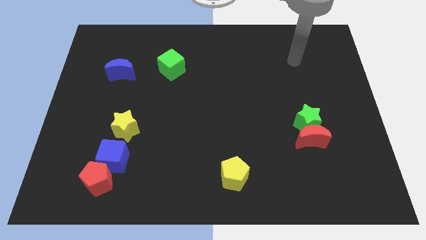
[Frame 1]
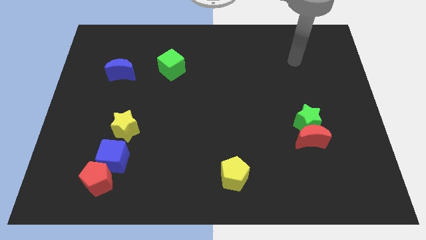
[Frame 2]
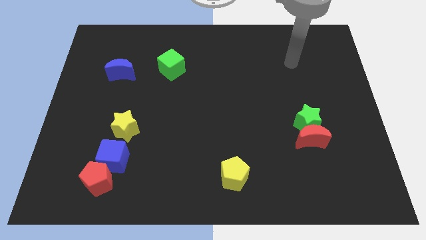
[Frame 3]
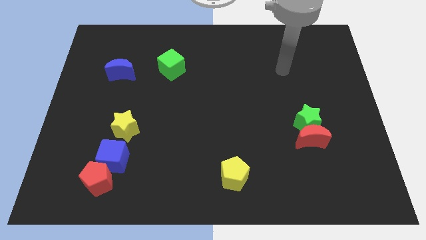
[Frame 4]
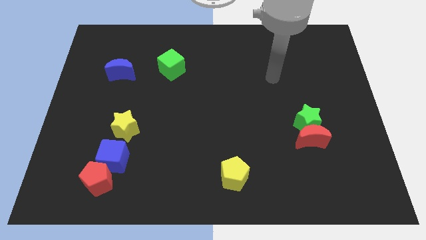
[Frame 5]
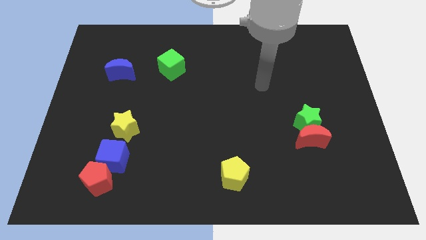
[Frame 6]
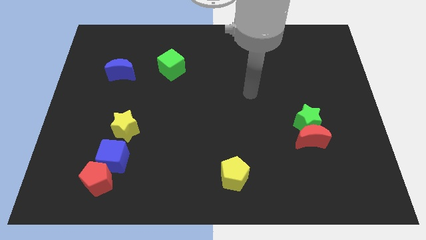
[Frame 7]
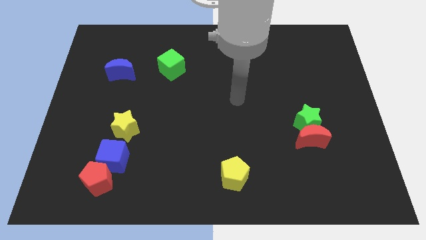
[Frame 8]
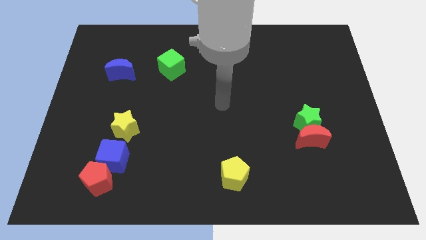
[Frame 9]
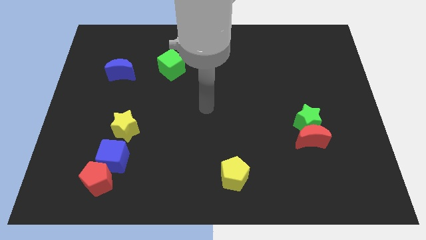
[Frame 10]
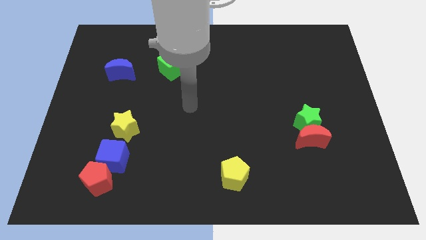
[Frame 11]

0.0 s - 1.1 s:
point your arm at the center of the board

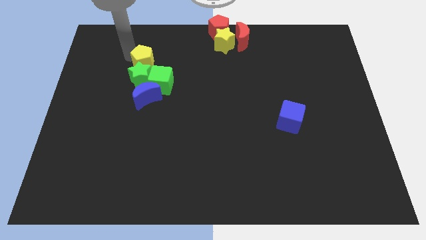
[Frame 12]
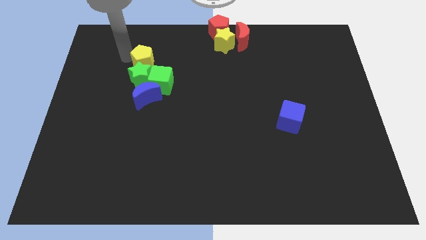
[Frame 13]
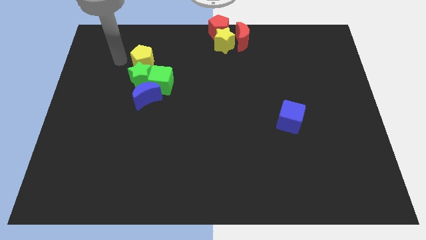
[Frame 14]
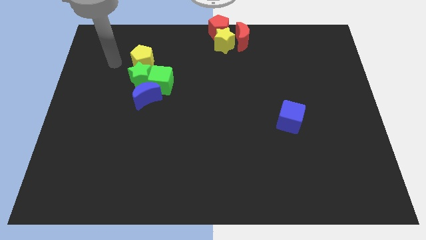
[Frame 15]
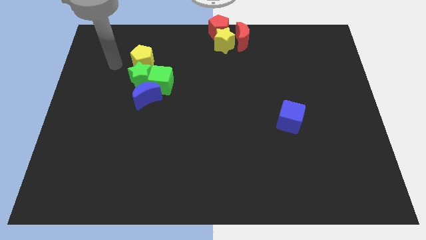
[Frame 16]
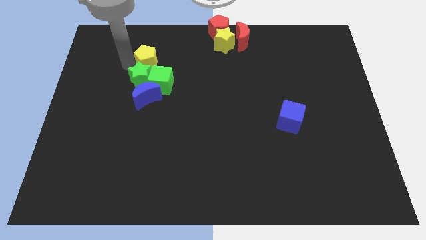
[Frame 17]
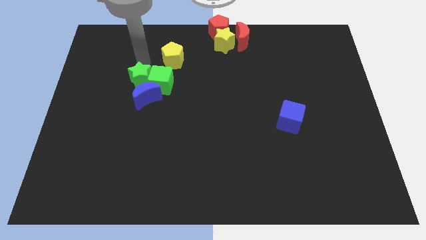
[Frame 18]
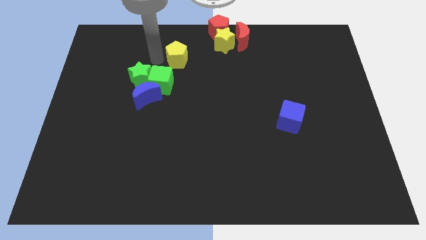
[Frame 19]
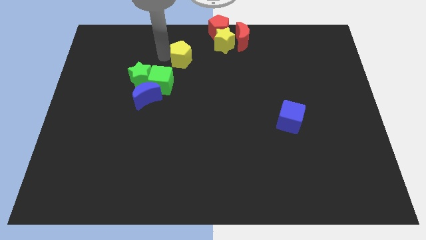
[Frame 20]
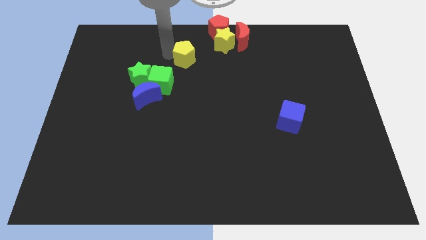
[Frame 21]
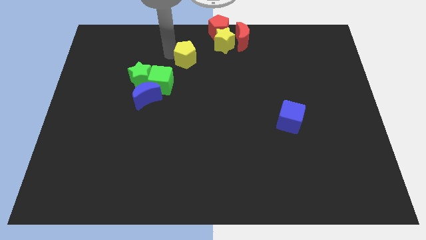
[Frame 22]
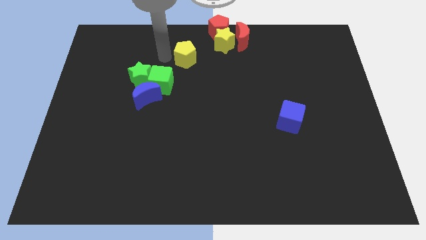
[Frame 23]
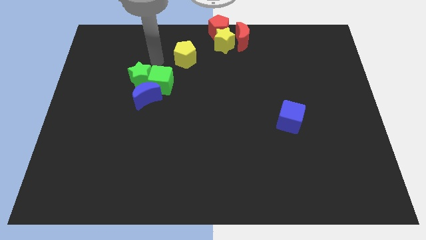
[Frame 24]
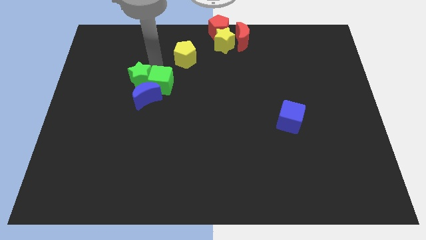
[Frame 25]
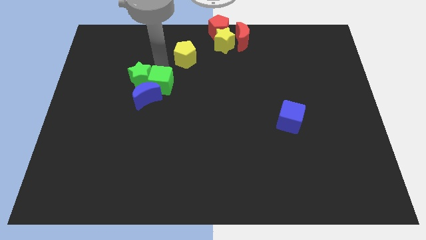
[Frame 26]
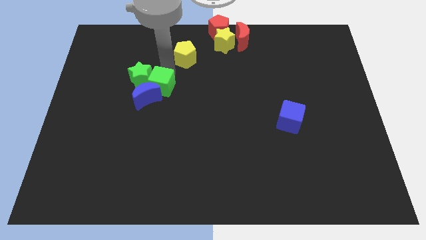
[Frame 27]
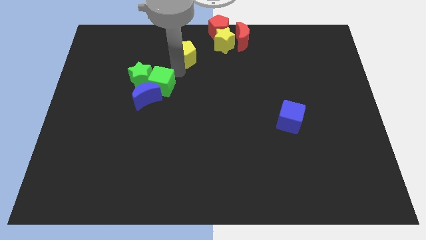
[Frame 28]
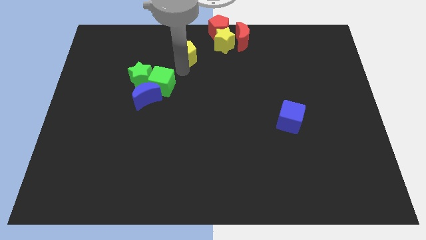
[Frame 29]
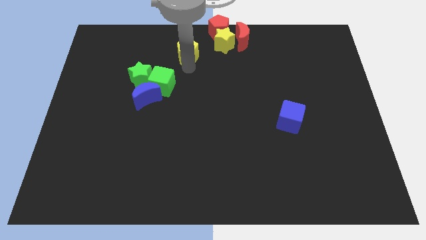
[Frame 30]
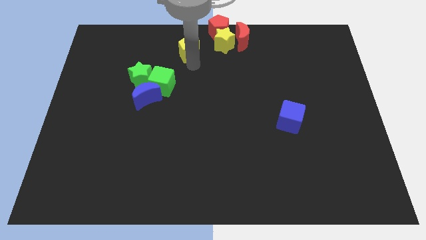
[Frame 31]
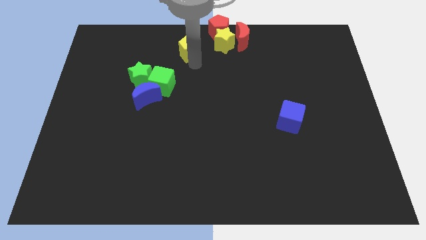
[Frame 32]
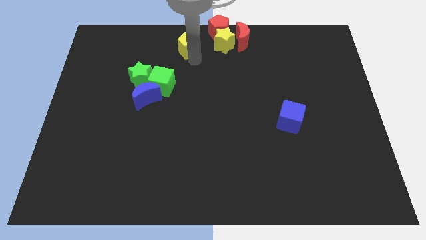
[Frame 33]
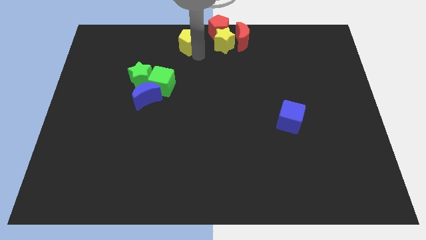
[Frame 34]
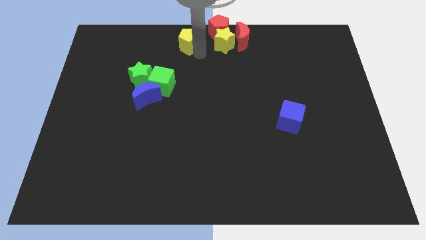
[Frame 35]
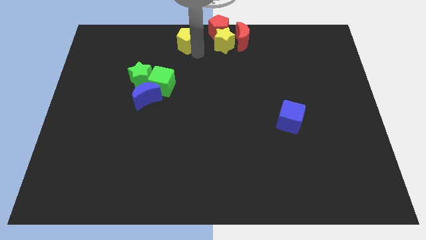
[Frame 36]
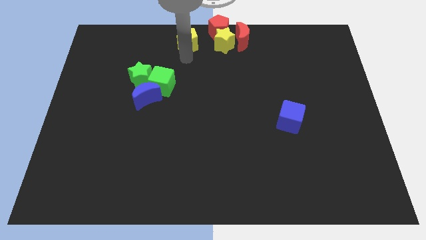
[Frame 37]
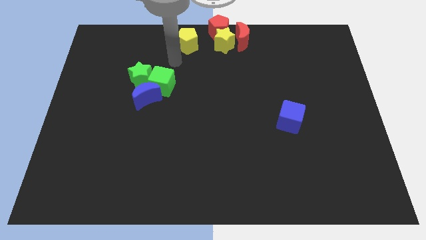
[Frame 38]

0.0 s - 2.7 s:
separate the yellow pentagon from the group of blocks

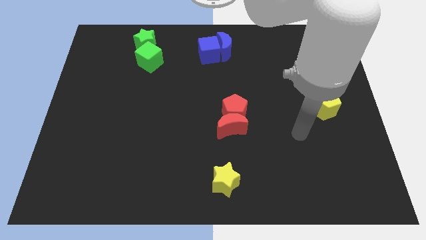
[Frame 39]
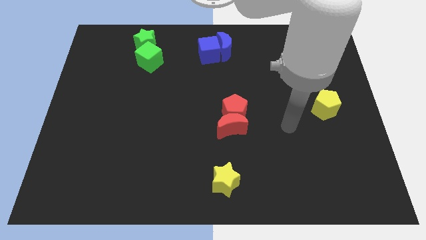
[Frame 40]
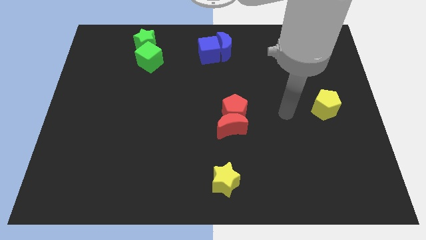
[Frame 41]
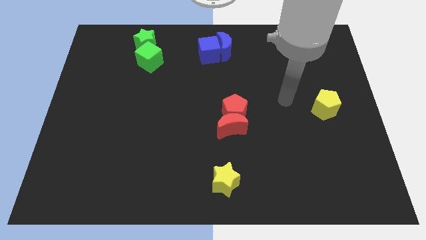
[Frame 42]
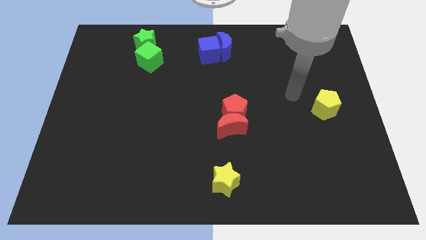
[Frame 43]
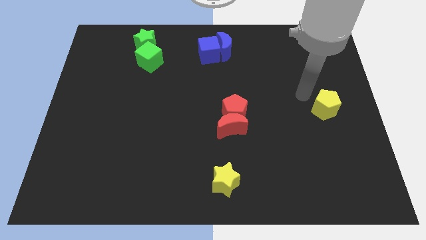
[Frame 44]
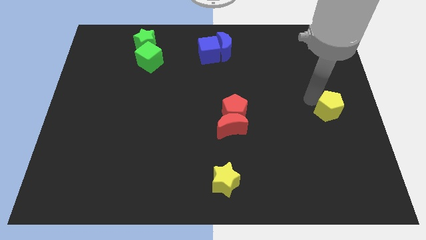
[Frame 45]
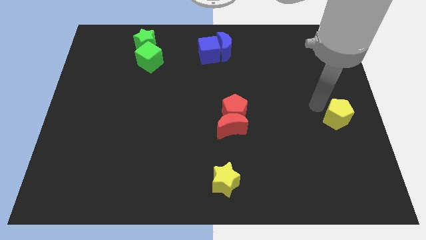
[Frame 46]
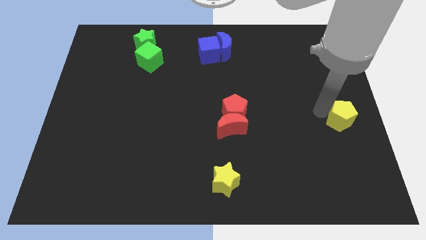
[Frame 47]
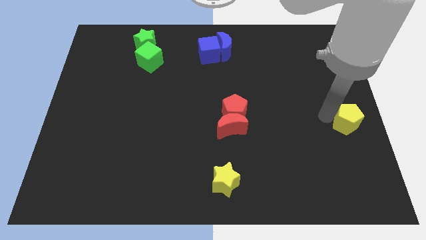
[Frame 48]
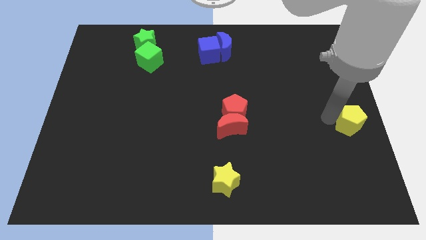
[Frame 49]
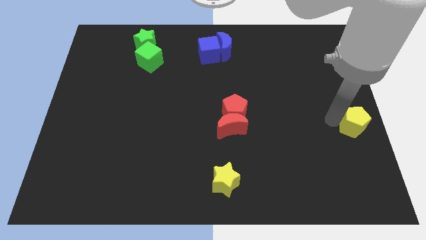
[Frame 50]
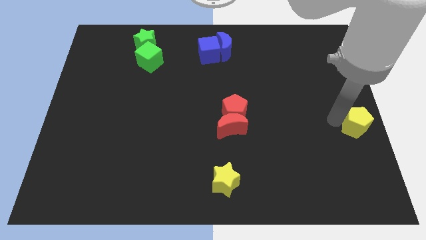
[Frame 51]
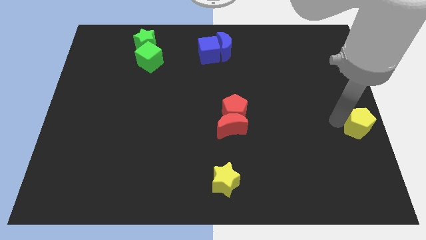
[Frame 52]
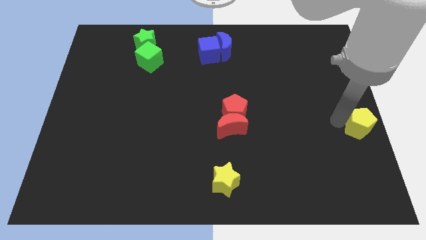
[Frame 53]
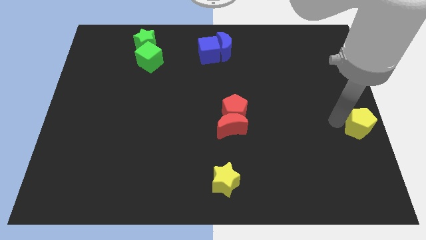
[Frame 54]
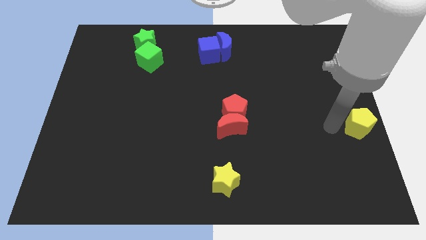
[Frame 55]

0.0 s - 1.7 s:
place the yellow penatgon parallel to red moon

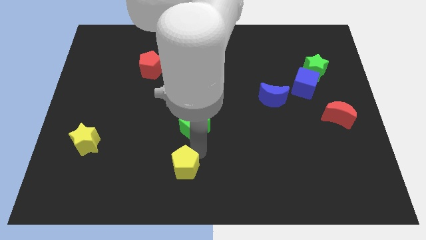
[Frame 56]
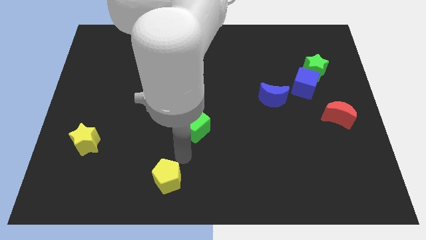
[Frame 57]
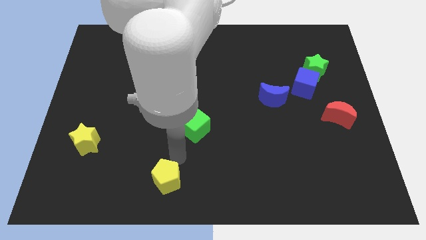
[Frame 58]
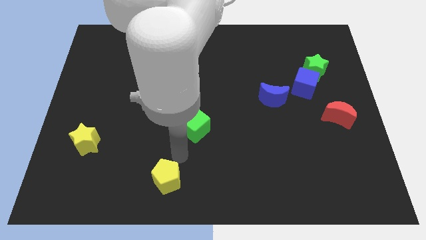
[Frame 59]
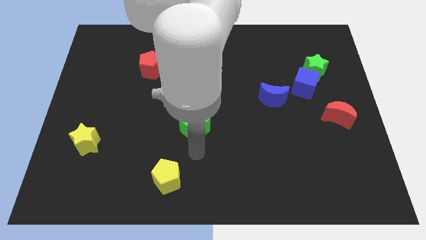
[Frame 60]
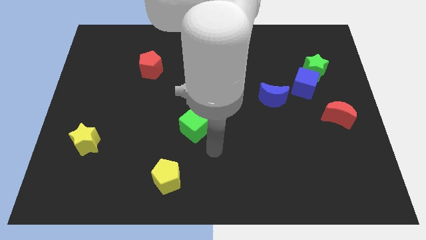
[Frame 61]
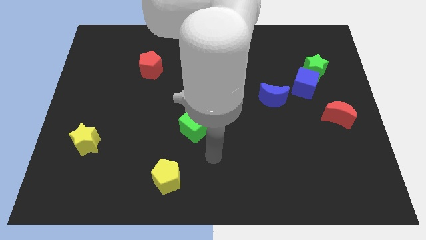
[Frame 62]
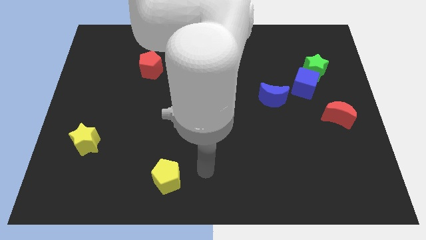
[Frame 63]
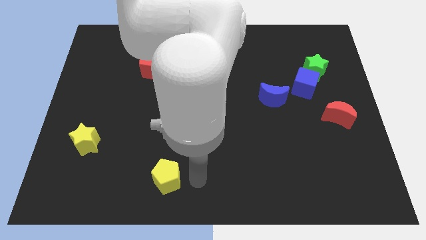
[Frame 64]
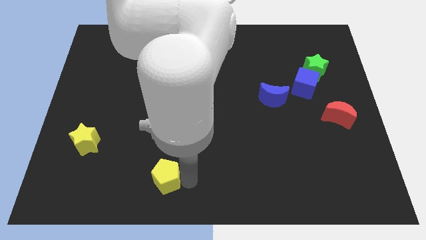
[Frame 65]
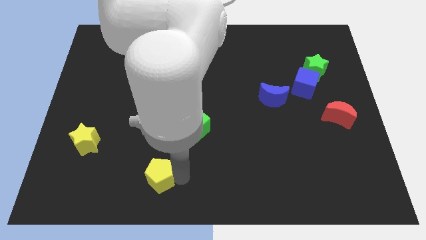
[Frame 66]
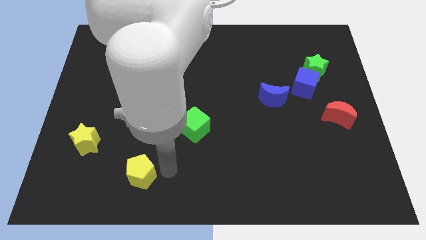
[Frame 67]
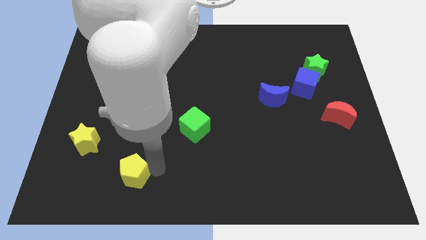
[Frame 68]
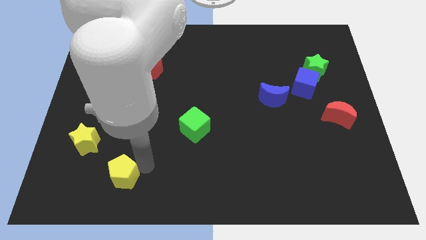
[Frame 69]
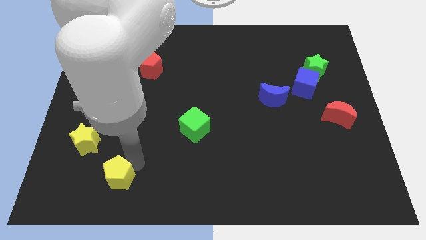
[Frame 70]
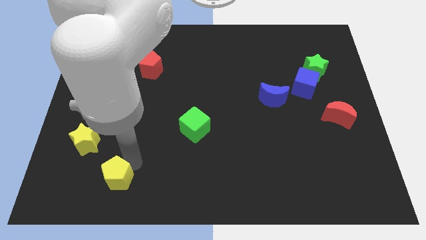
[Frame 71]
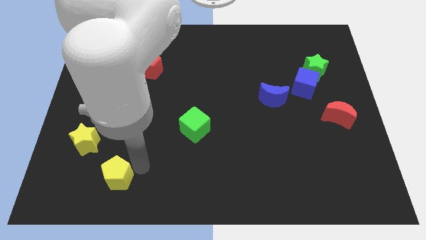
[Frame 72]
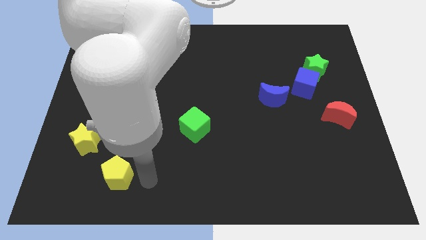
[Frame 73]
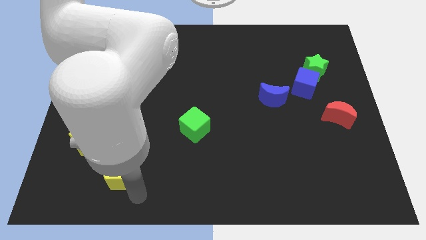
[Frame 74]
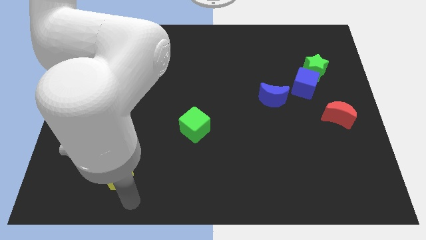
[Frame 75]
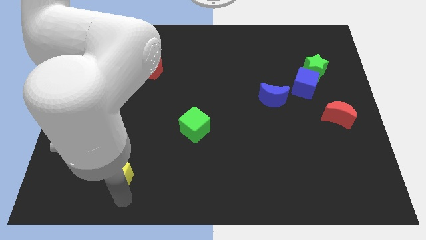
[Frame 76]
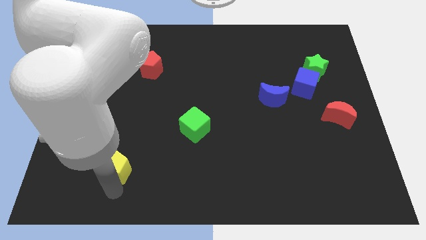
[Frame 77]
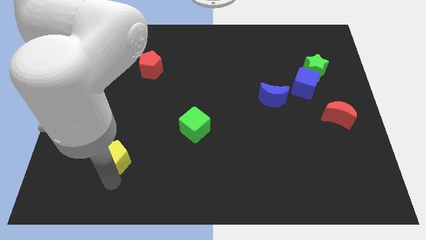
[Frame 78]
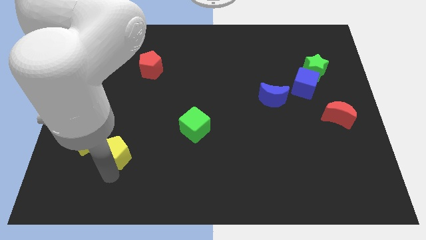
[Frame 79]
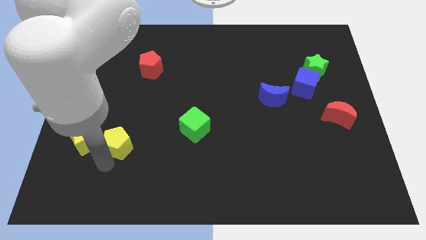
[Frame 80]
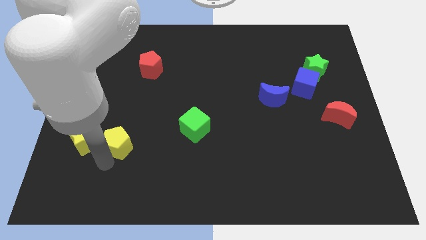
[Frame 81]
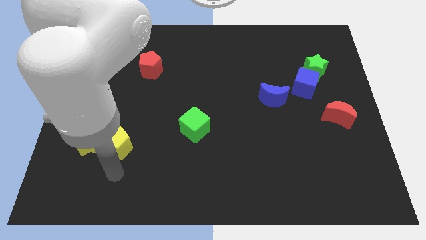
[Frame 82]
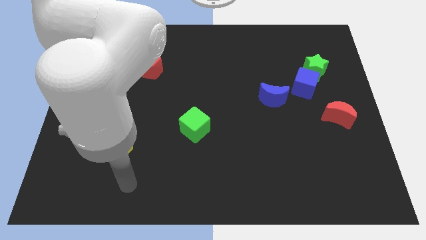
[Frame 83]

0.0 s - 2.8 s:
push the yellow pentagon to the right of the yellow star

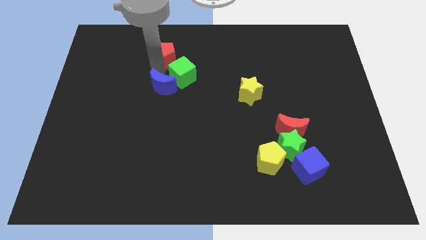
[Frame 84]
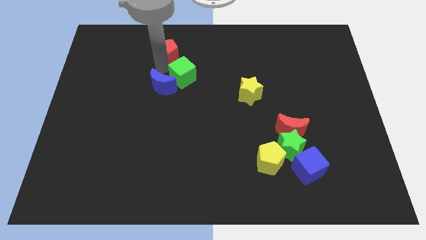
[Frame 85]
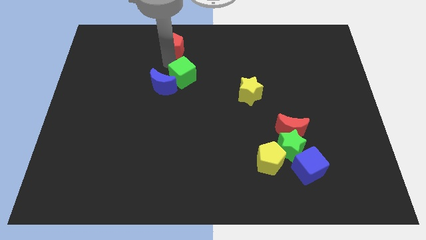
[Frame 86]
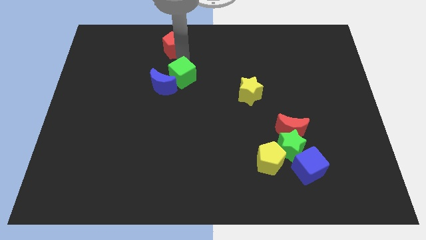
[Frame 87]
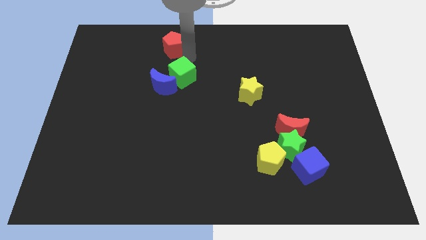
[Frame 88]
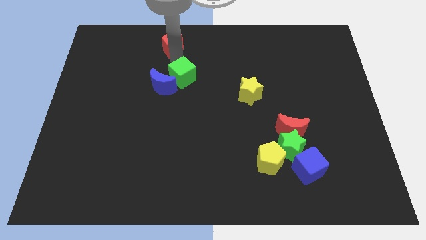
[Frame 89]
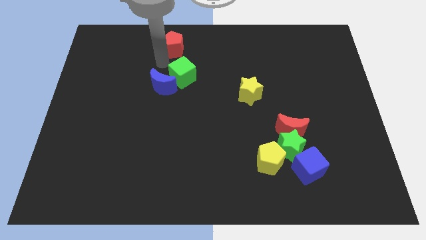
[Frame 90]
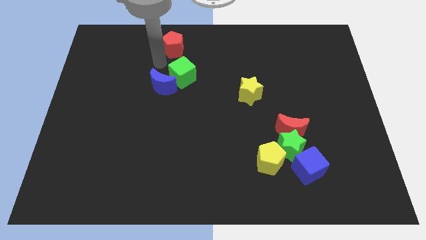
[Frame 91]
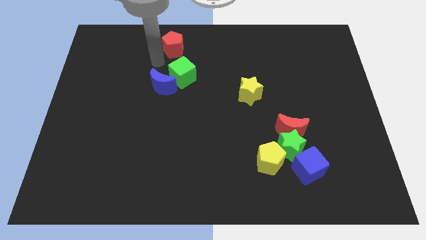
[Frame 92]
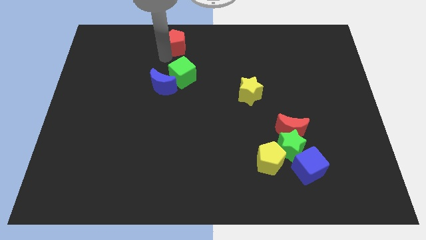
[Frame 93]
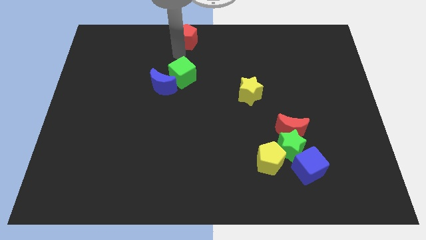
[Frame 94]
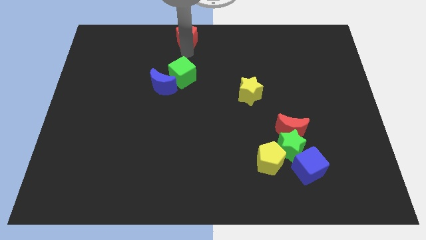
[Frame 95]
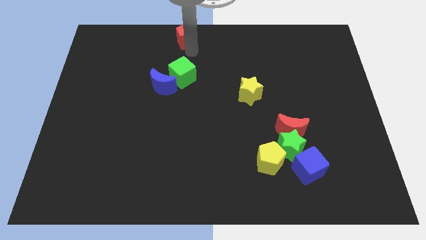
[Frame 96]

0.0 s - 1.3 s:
separate the red pentagon from the green cube
